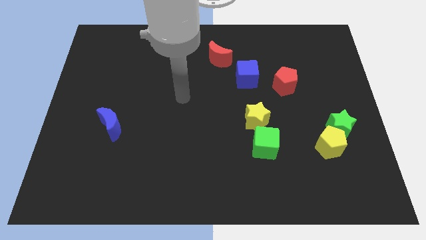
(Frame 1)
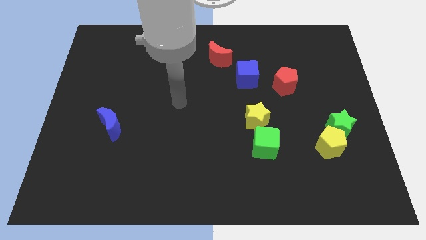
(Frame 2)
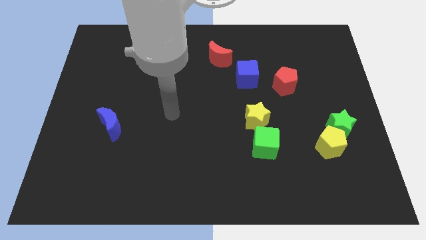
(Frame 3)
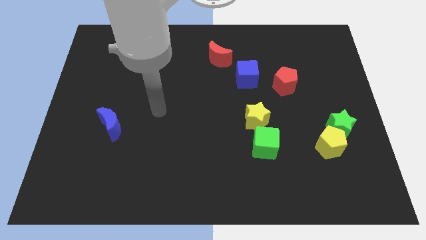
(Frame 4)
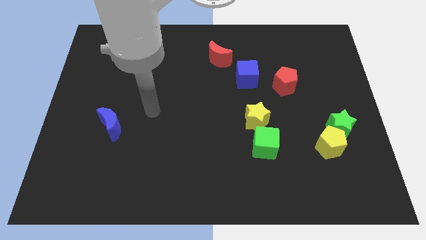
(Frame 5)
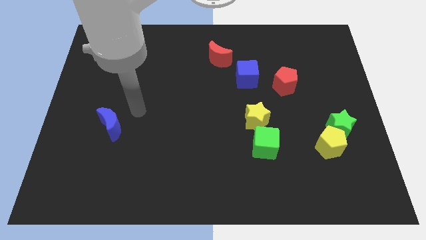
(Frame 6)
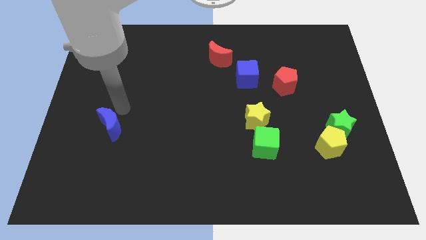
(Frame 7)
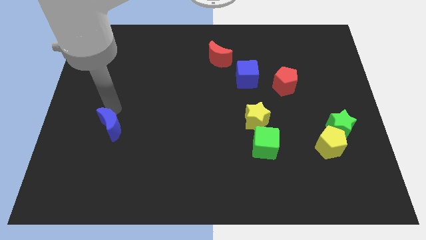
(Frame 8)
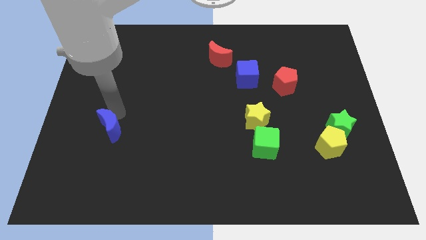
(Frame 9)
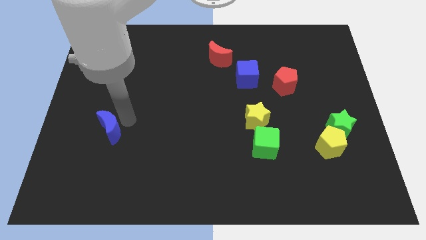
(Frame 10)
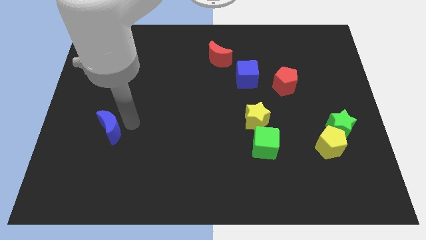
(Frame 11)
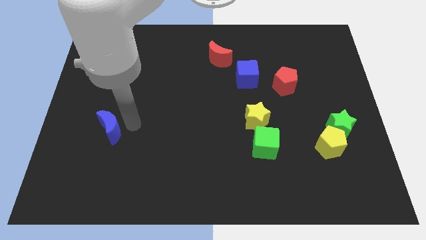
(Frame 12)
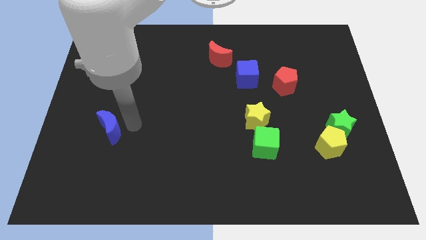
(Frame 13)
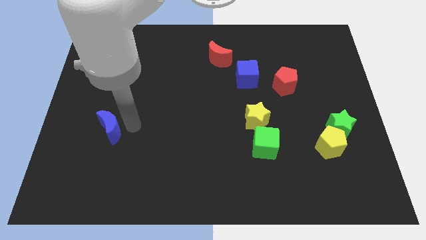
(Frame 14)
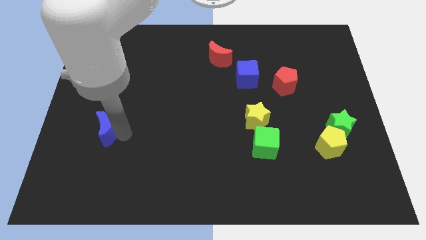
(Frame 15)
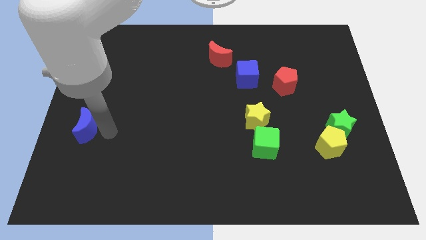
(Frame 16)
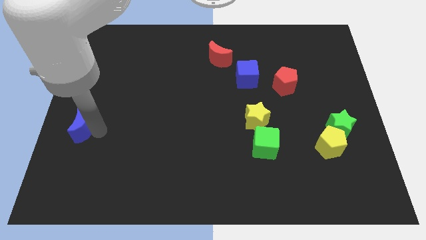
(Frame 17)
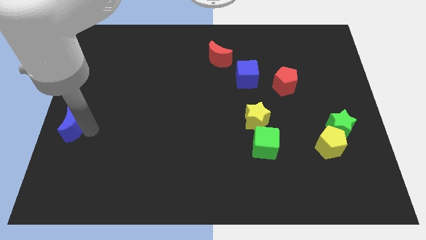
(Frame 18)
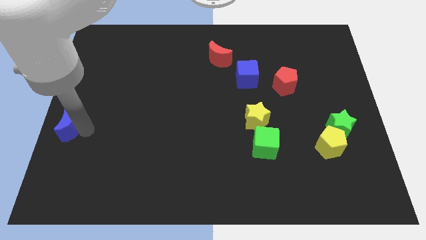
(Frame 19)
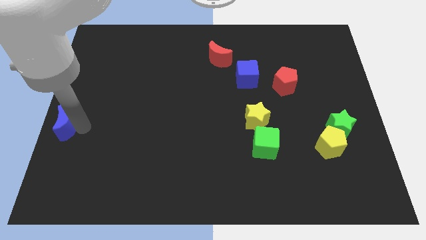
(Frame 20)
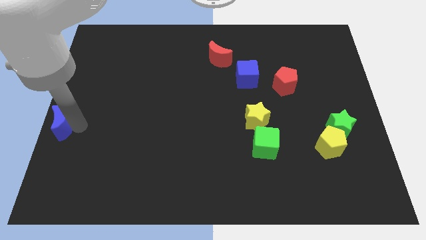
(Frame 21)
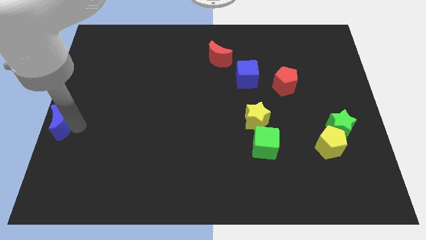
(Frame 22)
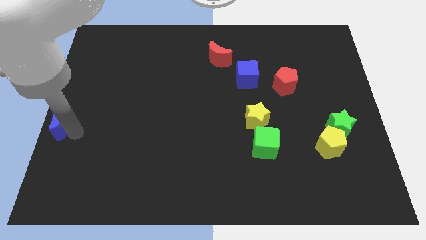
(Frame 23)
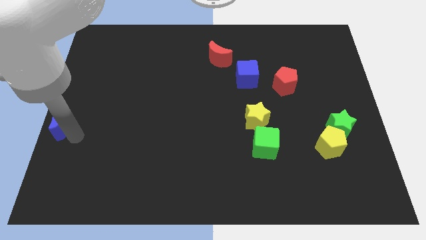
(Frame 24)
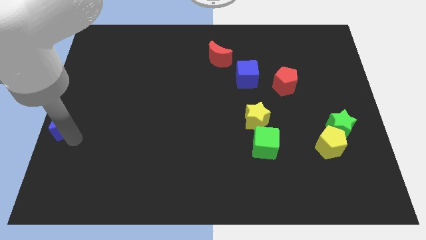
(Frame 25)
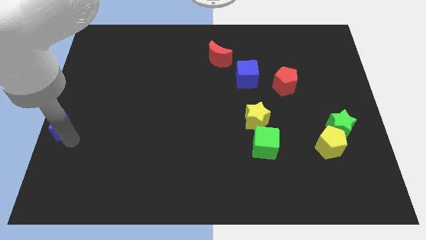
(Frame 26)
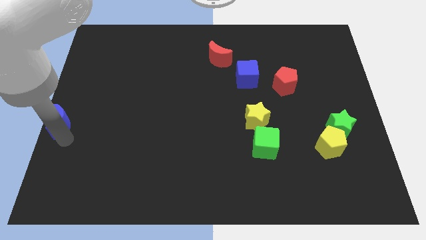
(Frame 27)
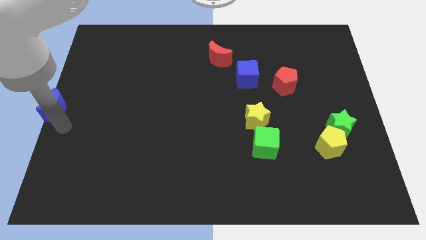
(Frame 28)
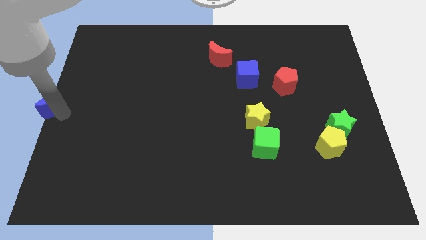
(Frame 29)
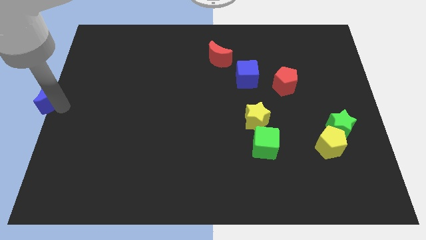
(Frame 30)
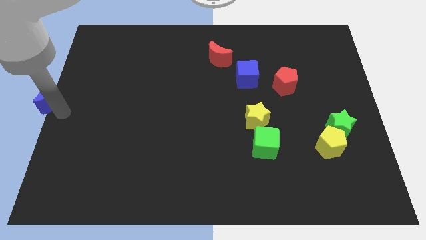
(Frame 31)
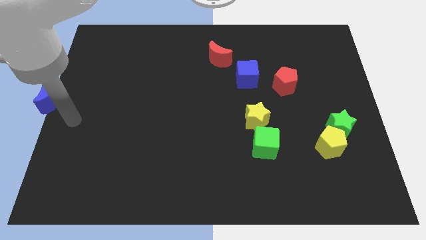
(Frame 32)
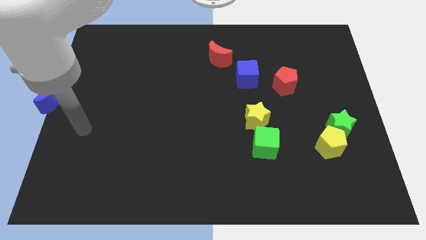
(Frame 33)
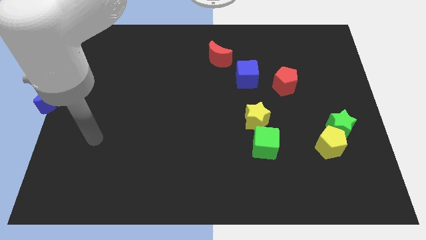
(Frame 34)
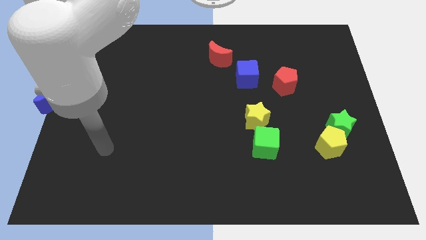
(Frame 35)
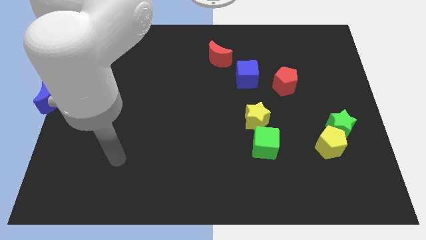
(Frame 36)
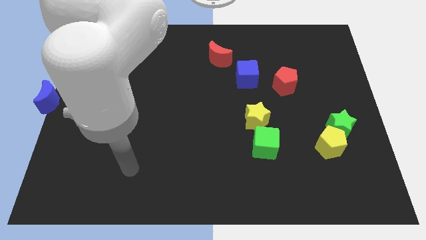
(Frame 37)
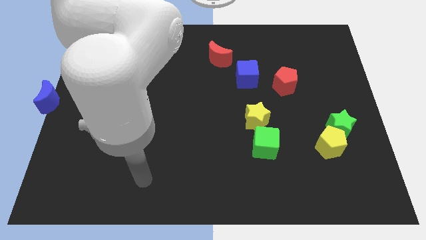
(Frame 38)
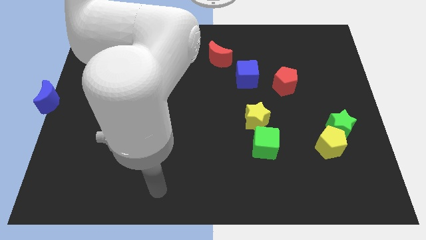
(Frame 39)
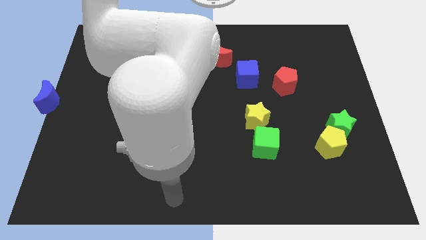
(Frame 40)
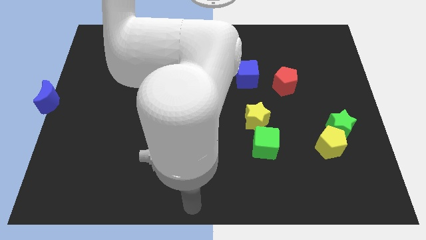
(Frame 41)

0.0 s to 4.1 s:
push the blue moon into the center left of the board

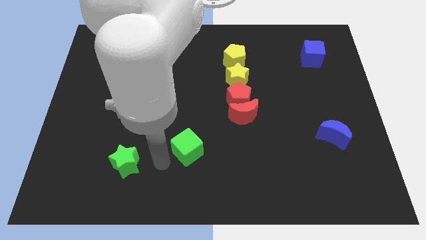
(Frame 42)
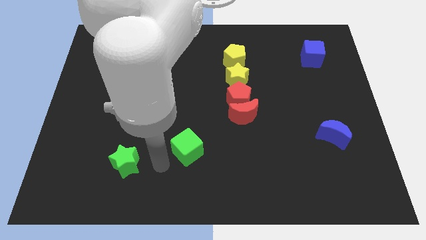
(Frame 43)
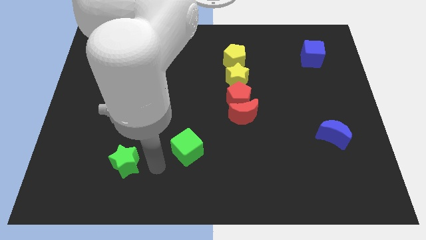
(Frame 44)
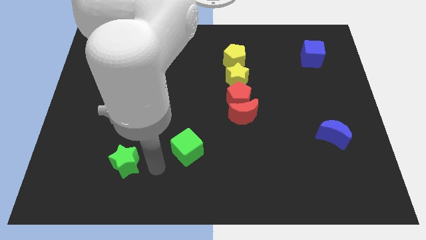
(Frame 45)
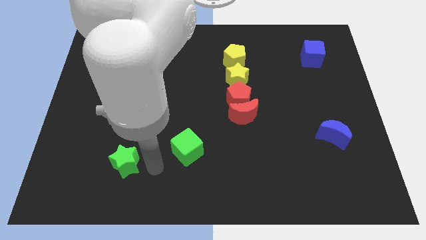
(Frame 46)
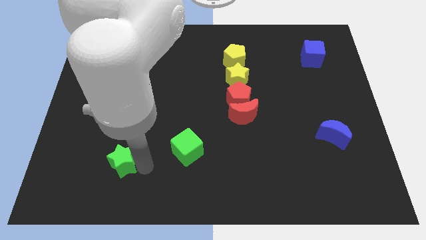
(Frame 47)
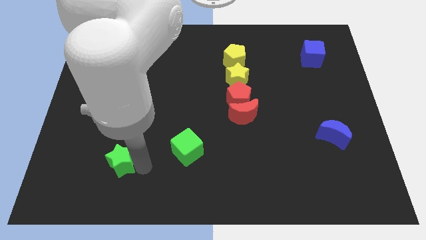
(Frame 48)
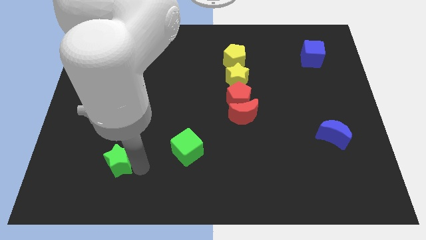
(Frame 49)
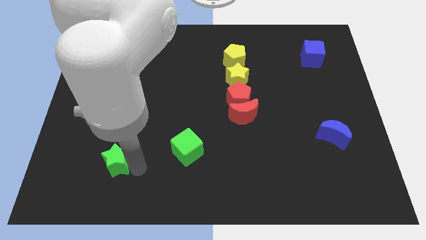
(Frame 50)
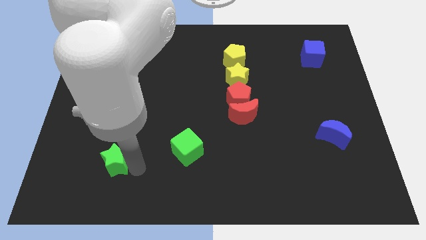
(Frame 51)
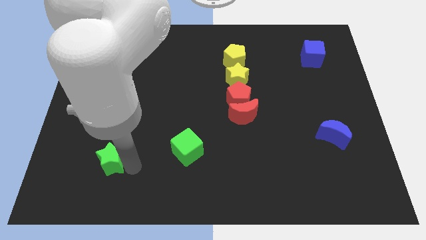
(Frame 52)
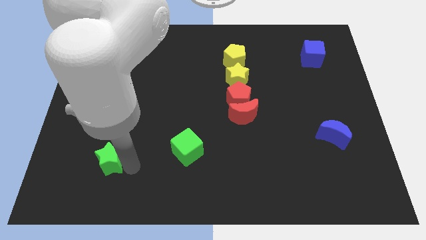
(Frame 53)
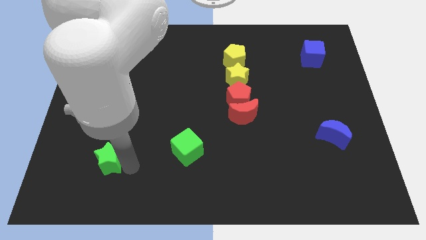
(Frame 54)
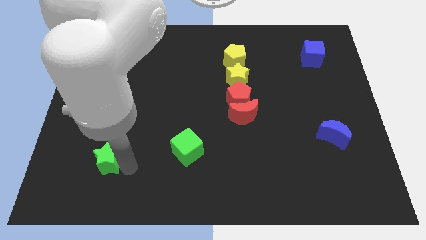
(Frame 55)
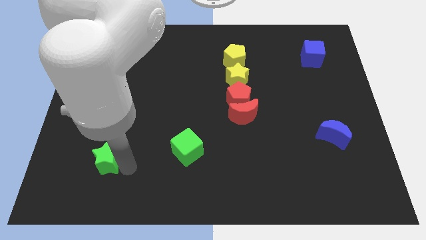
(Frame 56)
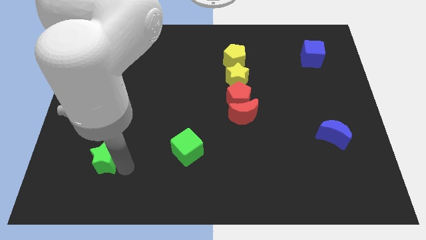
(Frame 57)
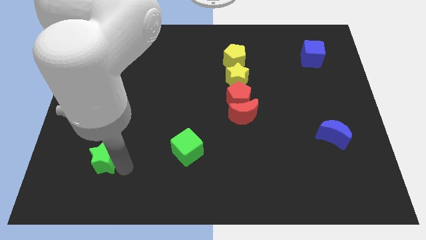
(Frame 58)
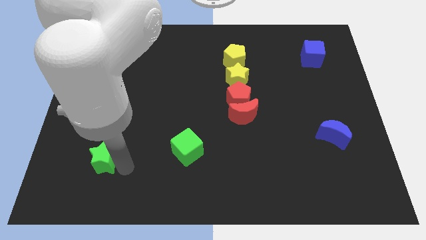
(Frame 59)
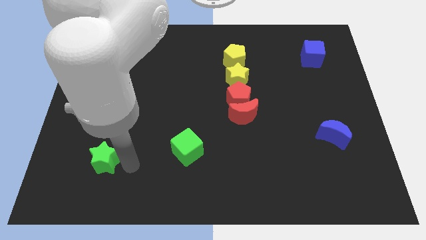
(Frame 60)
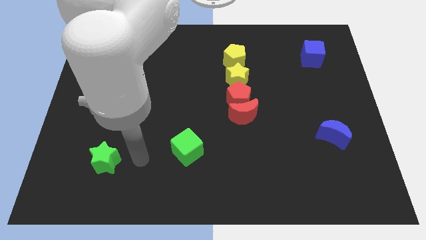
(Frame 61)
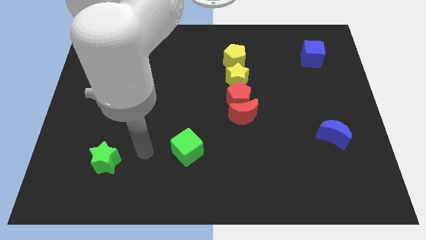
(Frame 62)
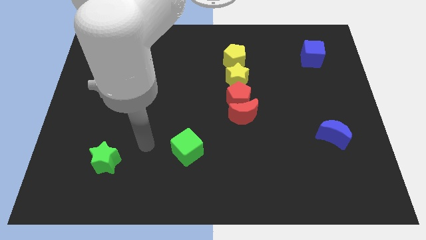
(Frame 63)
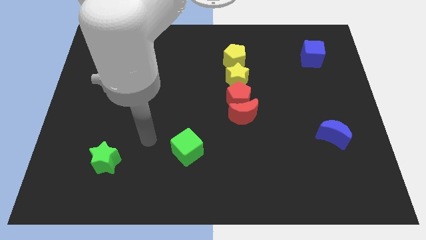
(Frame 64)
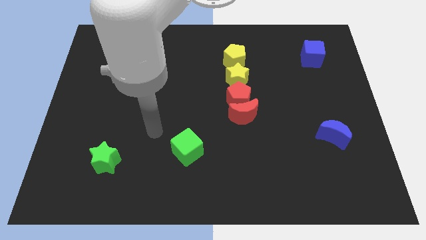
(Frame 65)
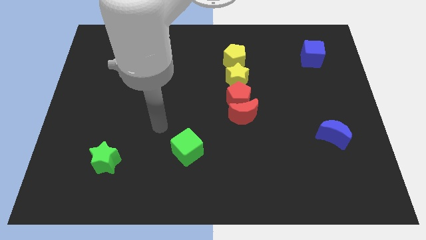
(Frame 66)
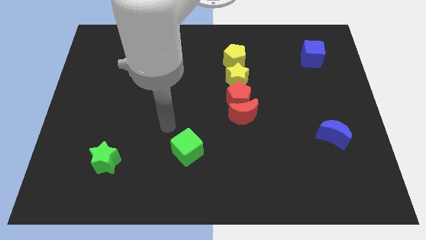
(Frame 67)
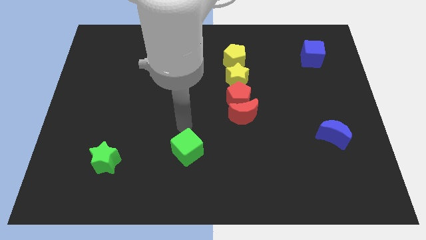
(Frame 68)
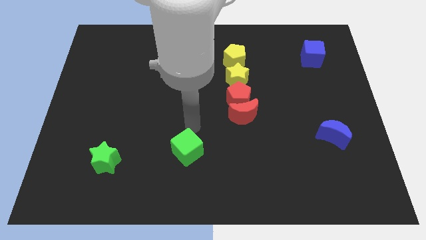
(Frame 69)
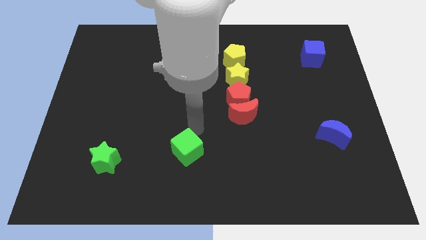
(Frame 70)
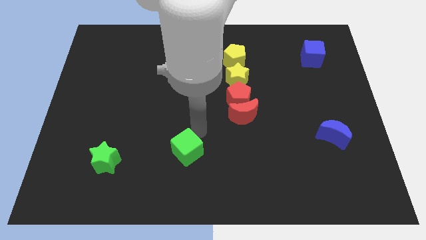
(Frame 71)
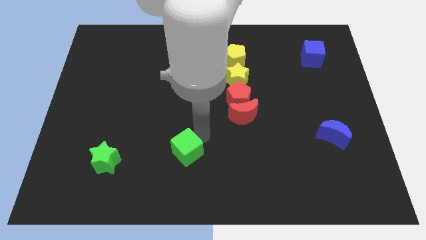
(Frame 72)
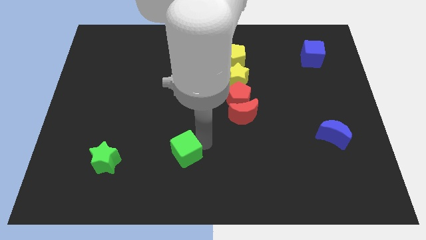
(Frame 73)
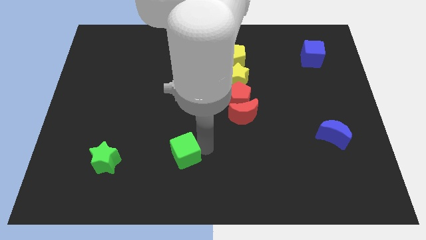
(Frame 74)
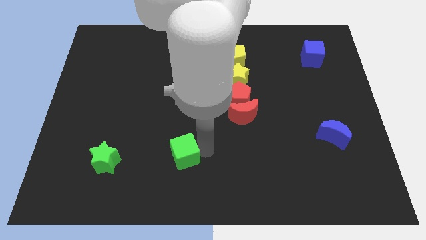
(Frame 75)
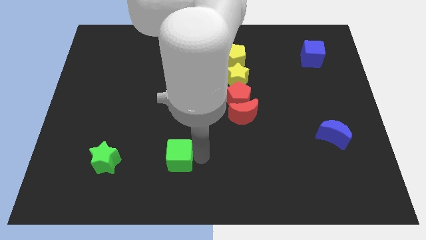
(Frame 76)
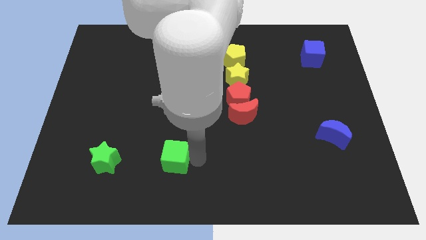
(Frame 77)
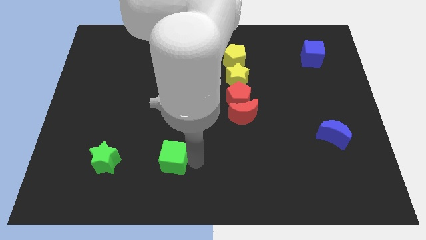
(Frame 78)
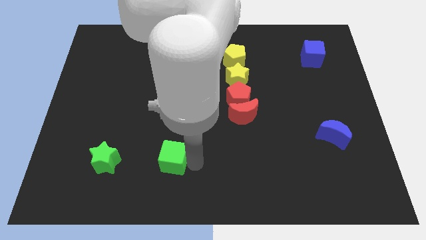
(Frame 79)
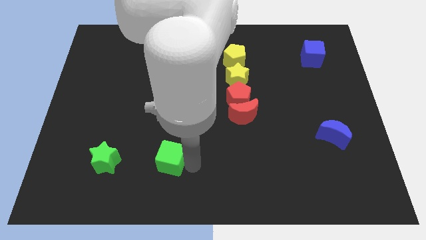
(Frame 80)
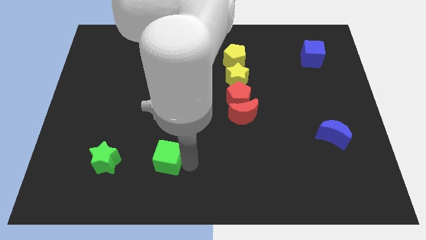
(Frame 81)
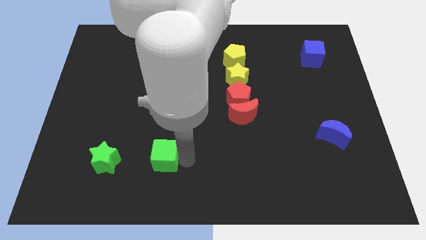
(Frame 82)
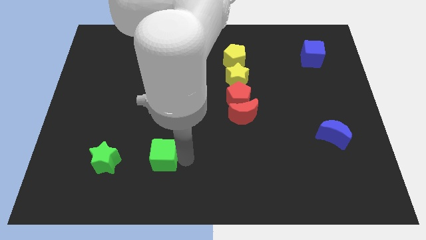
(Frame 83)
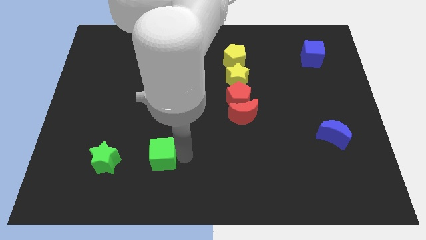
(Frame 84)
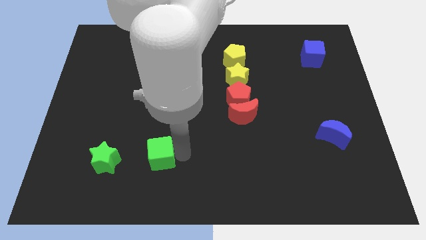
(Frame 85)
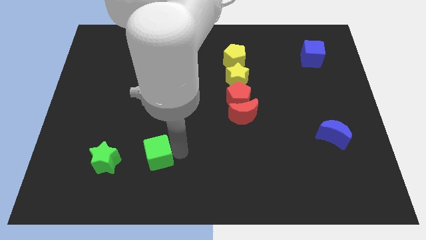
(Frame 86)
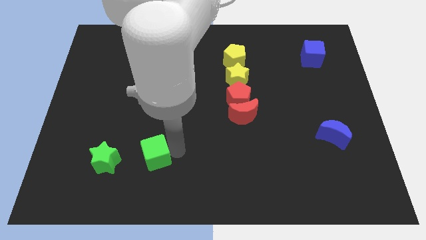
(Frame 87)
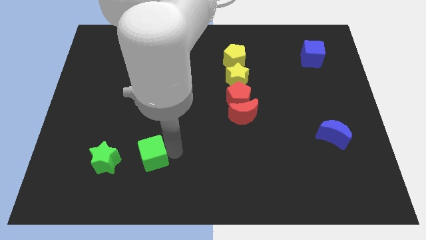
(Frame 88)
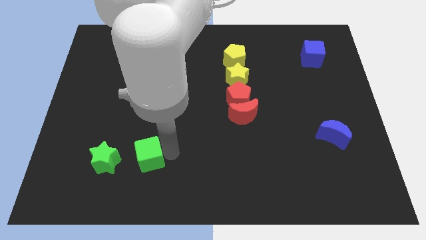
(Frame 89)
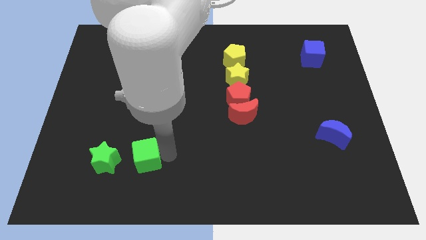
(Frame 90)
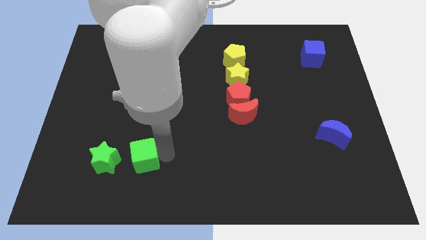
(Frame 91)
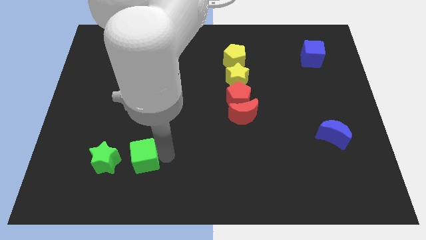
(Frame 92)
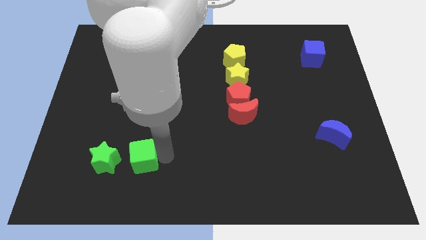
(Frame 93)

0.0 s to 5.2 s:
push the green star and green cube towards the left side of the board
